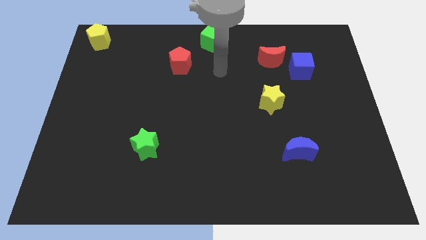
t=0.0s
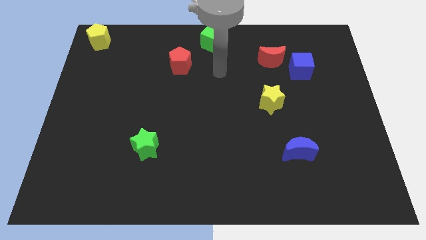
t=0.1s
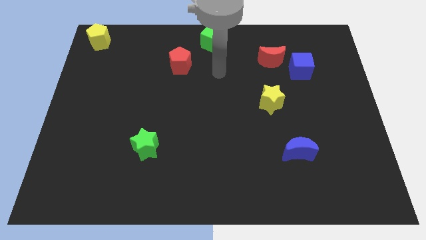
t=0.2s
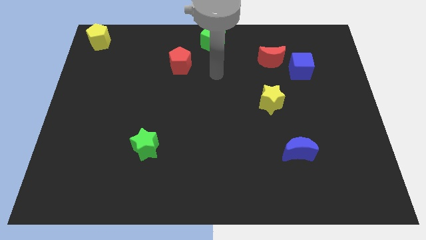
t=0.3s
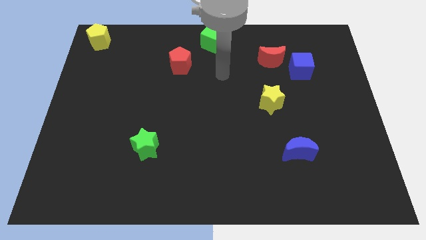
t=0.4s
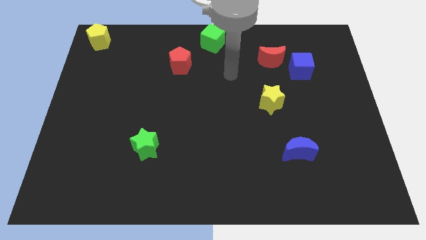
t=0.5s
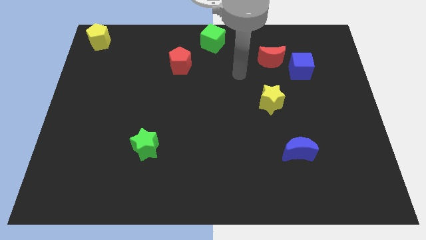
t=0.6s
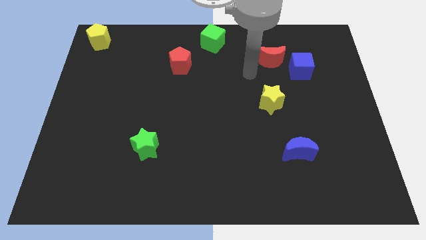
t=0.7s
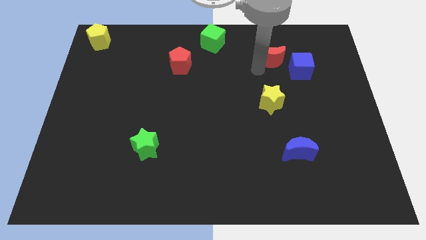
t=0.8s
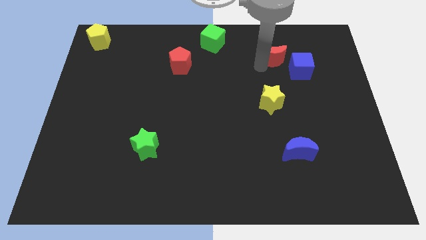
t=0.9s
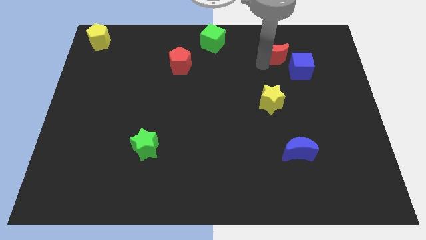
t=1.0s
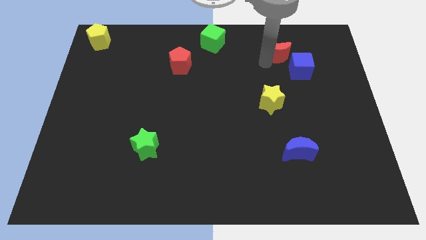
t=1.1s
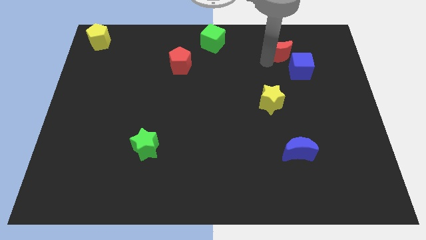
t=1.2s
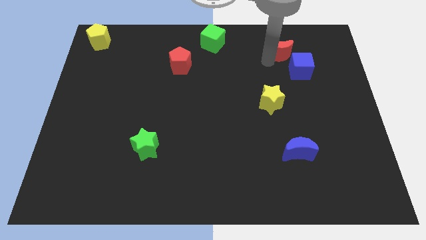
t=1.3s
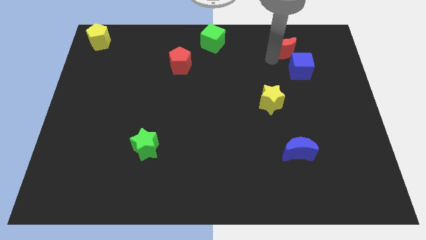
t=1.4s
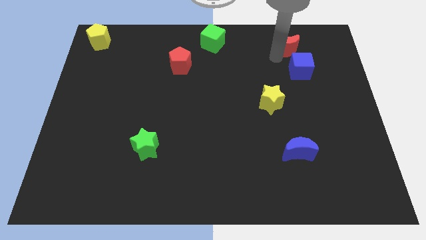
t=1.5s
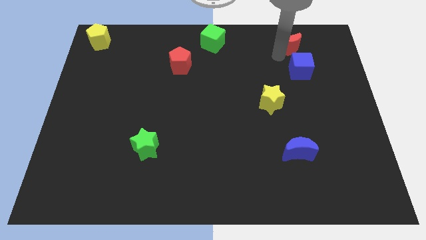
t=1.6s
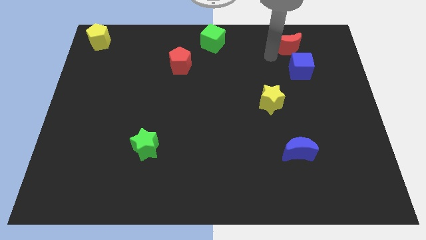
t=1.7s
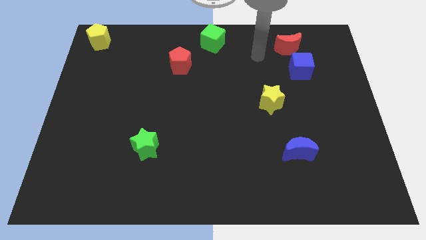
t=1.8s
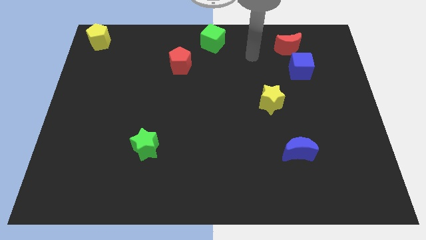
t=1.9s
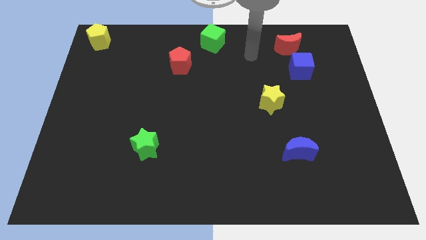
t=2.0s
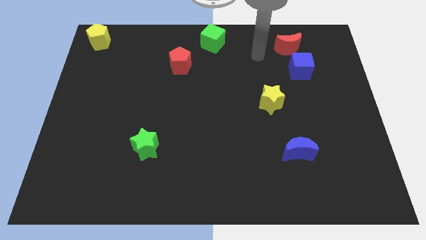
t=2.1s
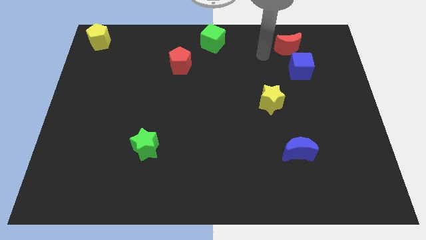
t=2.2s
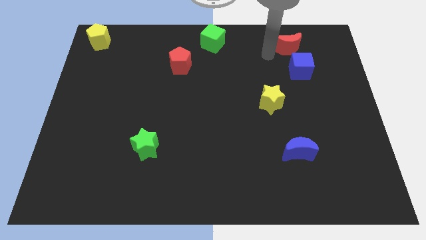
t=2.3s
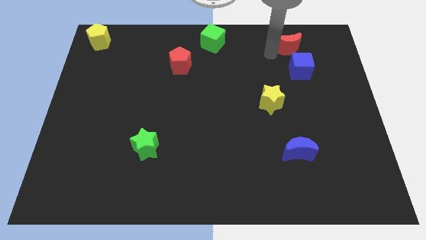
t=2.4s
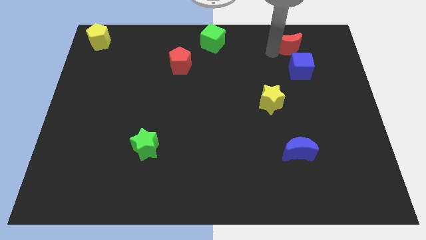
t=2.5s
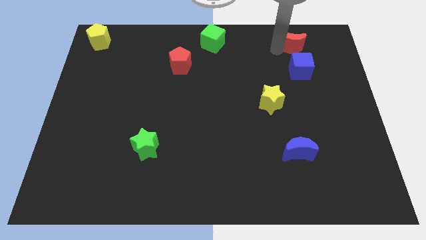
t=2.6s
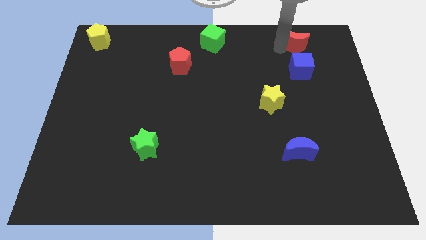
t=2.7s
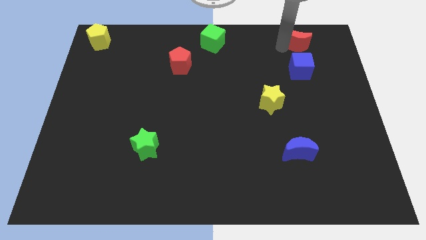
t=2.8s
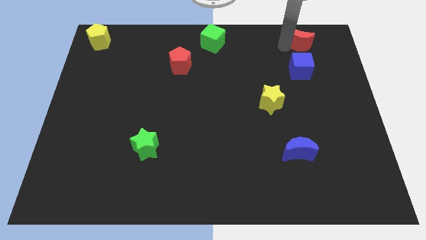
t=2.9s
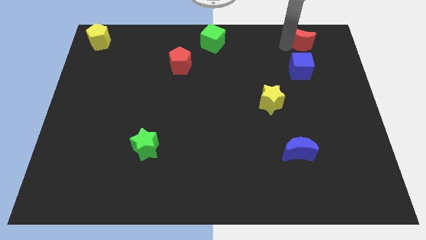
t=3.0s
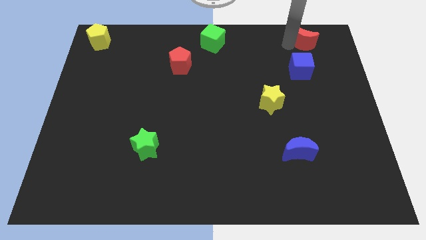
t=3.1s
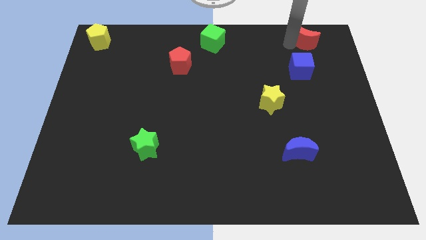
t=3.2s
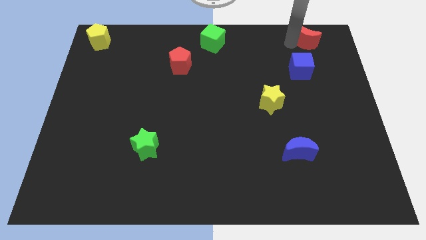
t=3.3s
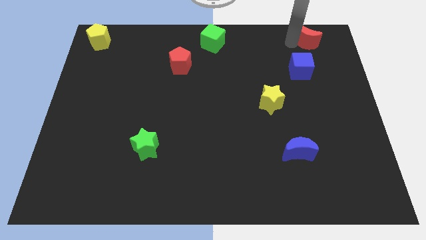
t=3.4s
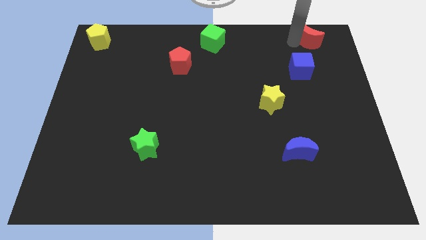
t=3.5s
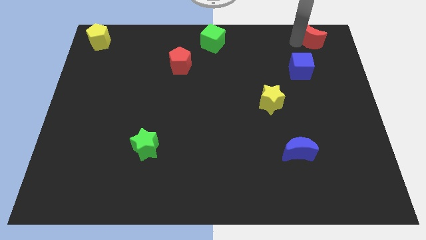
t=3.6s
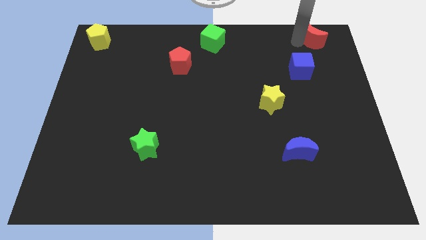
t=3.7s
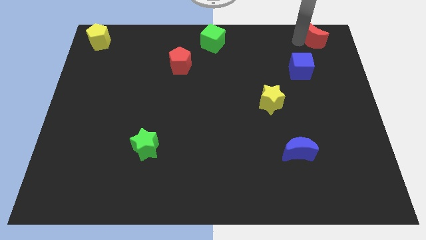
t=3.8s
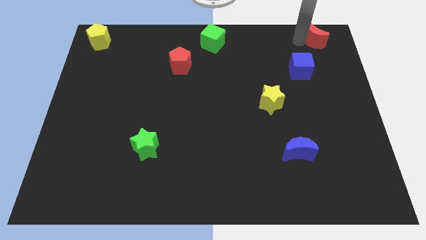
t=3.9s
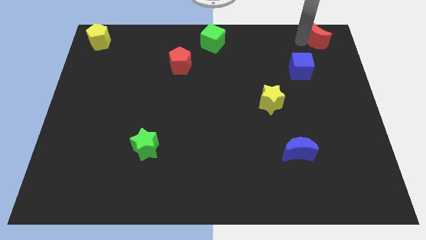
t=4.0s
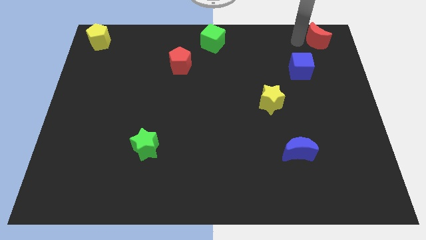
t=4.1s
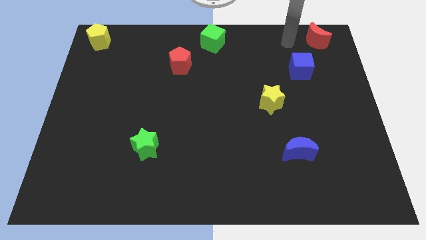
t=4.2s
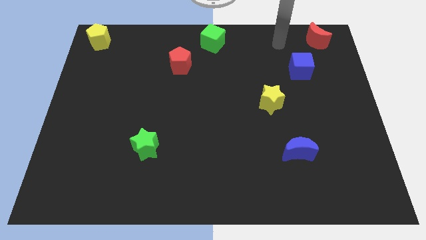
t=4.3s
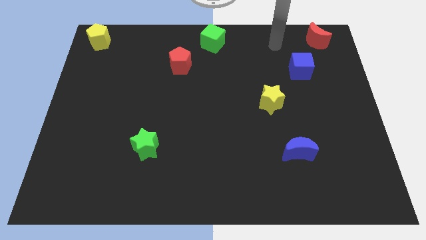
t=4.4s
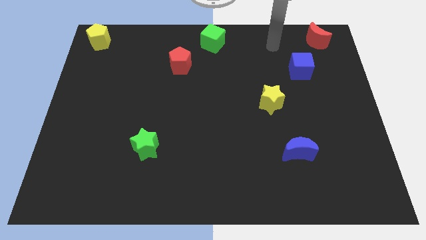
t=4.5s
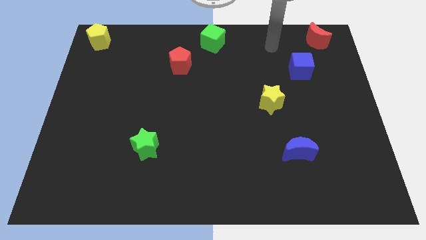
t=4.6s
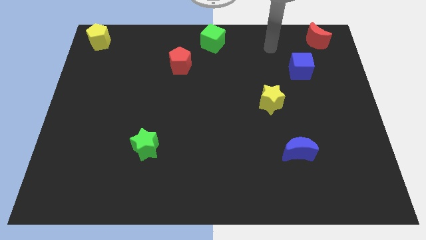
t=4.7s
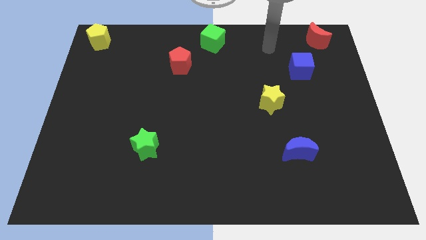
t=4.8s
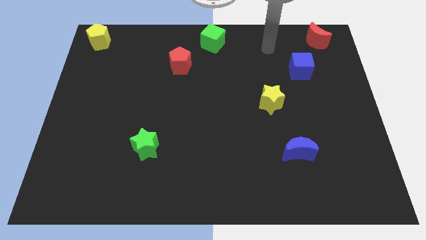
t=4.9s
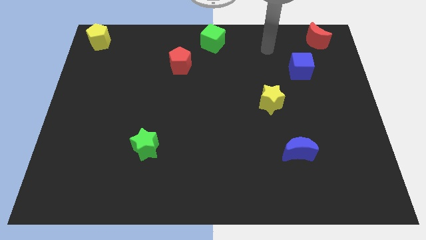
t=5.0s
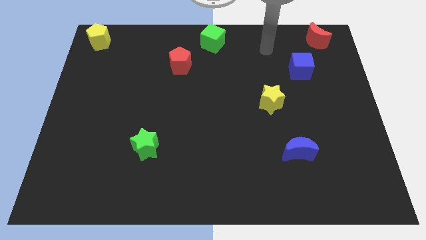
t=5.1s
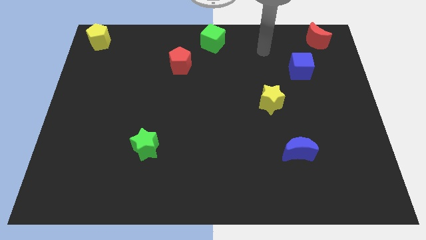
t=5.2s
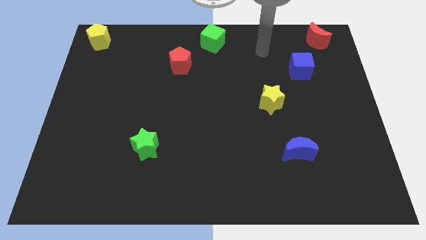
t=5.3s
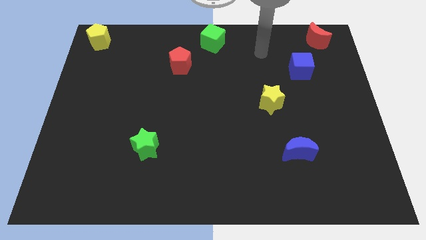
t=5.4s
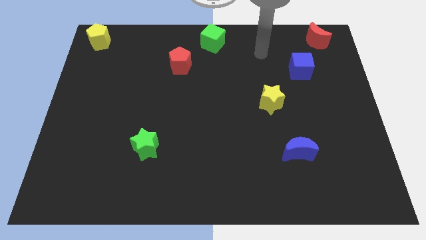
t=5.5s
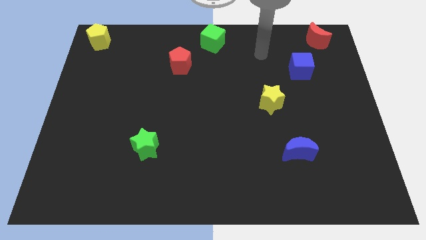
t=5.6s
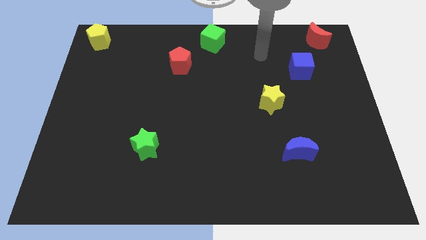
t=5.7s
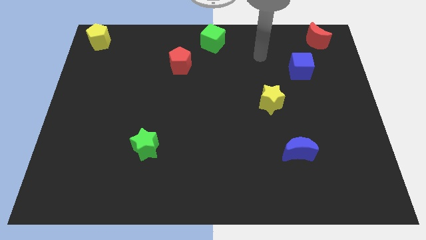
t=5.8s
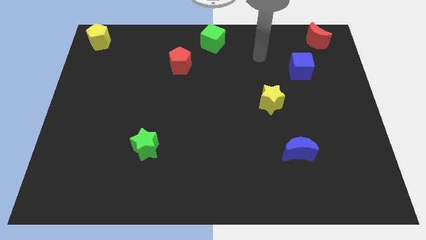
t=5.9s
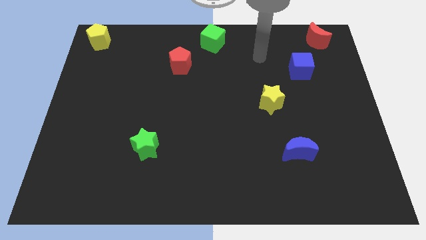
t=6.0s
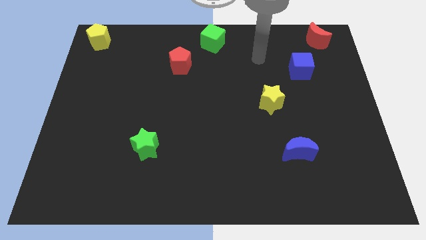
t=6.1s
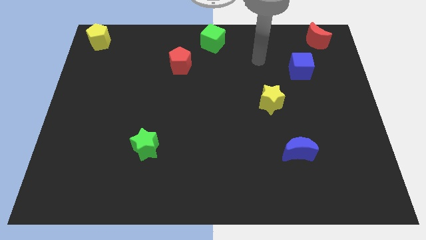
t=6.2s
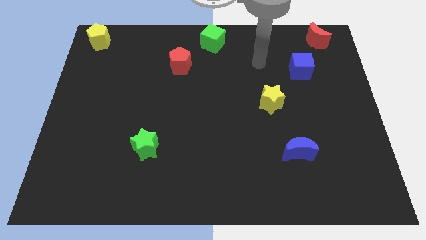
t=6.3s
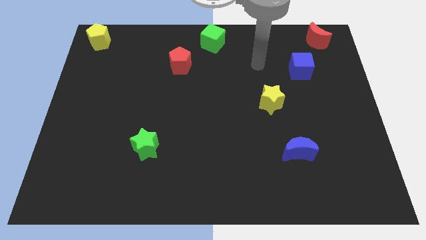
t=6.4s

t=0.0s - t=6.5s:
move the red crescent to the top right corner of the board

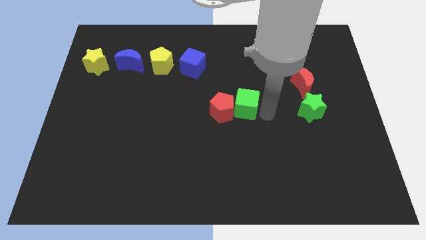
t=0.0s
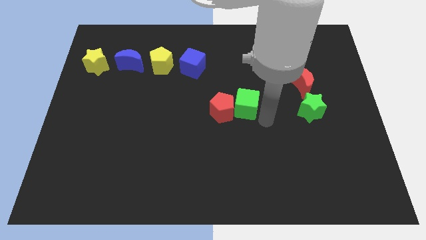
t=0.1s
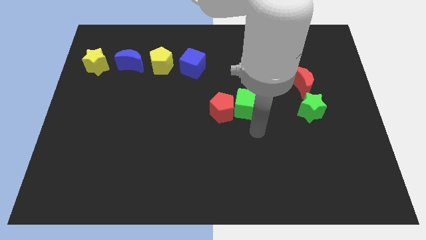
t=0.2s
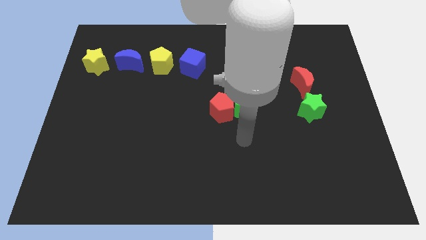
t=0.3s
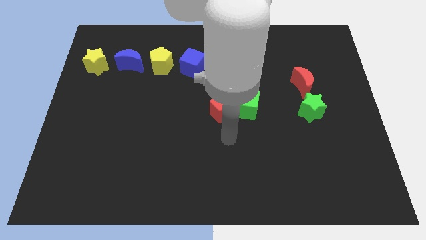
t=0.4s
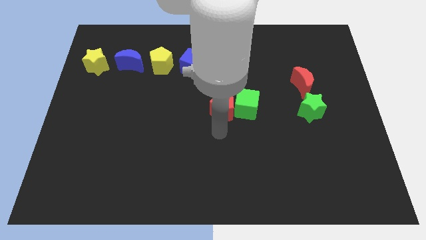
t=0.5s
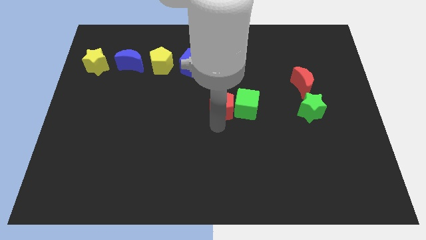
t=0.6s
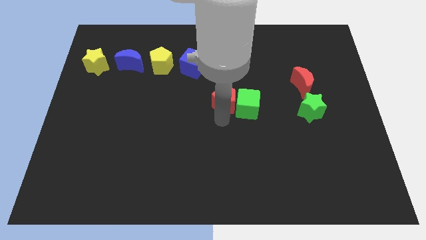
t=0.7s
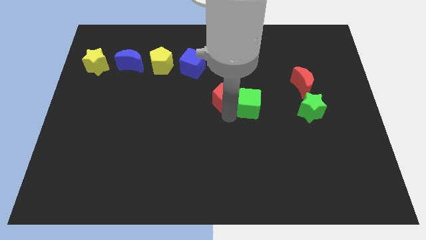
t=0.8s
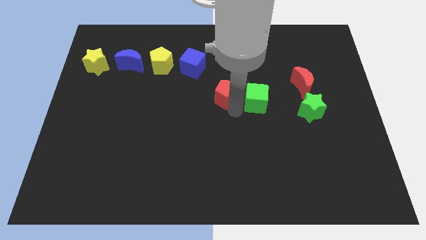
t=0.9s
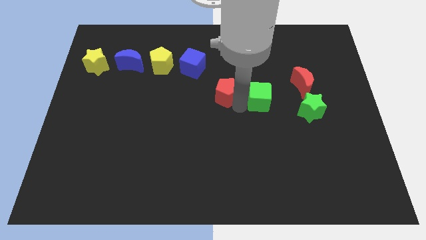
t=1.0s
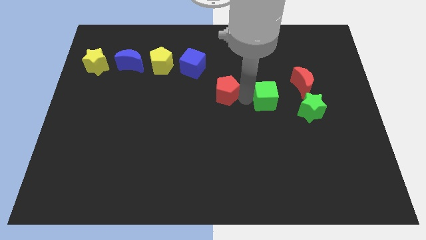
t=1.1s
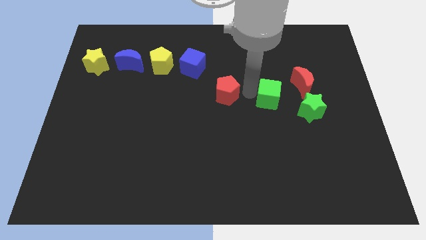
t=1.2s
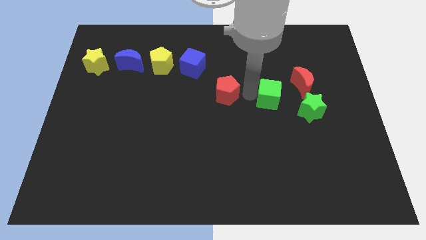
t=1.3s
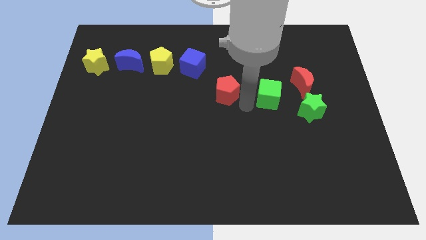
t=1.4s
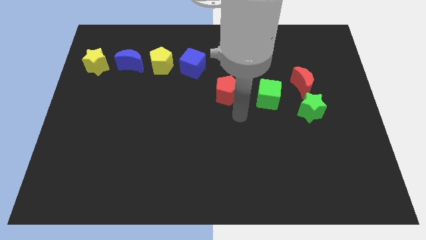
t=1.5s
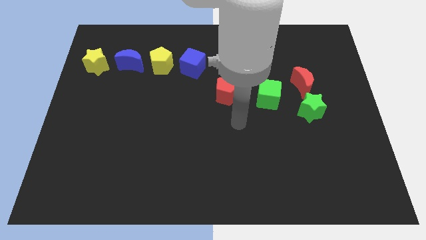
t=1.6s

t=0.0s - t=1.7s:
separate green cube from red pentagon

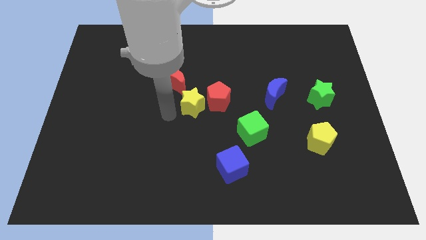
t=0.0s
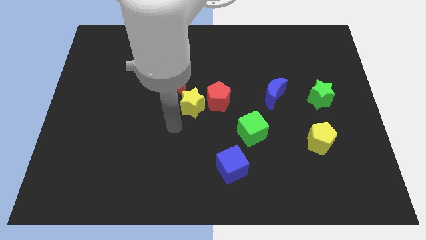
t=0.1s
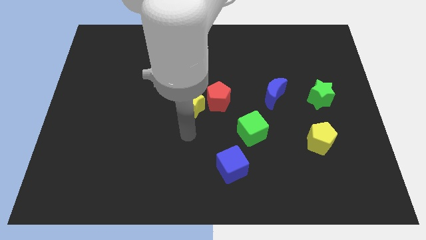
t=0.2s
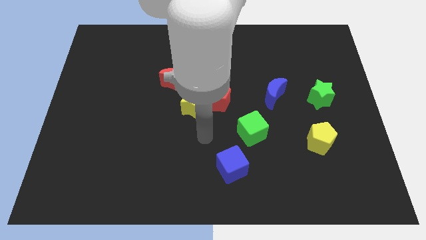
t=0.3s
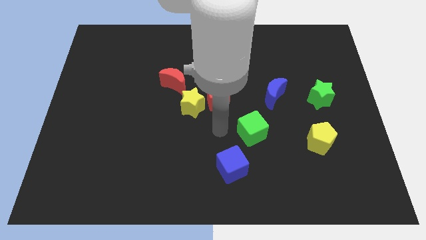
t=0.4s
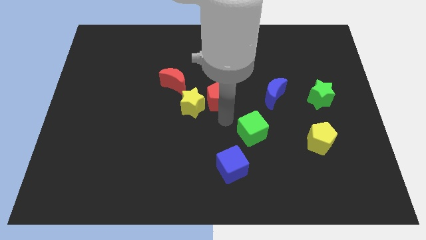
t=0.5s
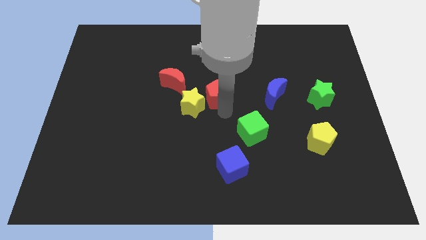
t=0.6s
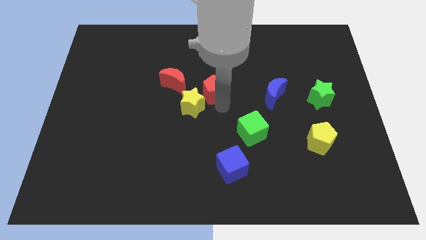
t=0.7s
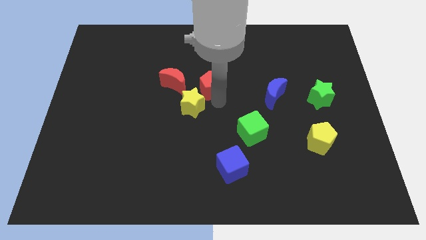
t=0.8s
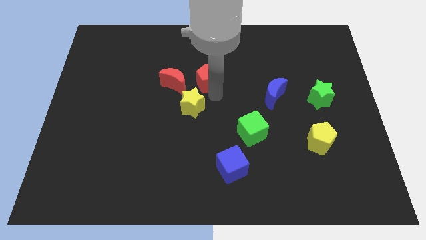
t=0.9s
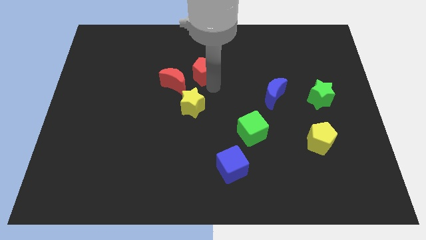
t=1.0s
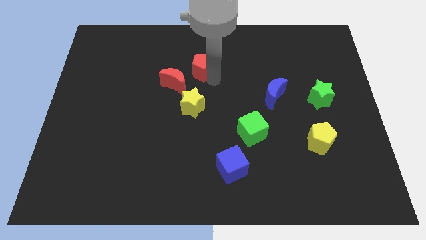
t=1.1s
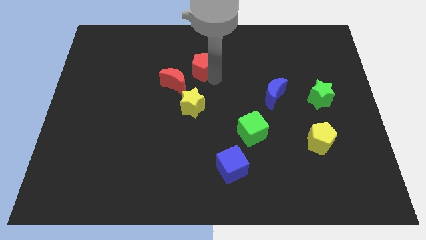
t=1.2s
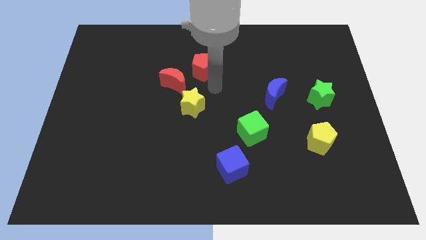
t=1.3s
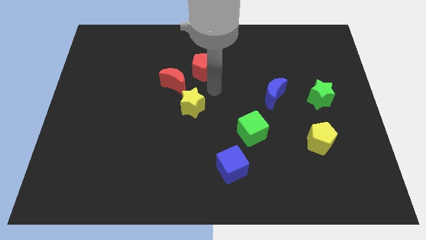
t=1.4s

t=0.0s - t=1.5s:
separate the red pentagon from the yellow star
